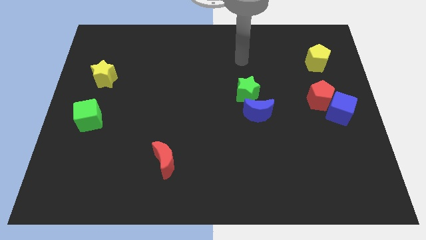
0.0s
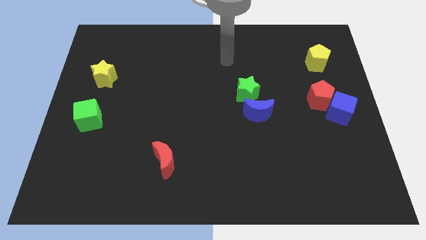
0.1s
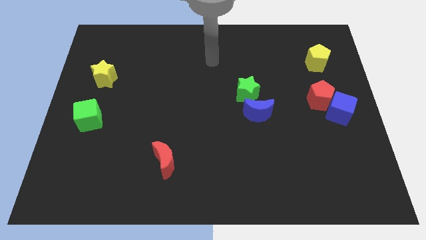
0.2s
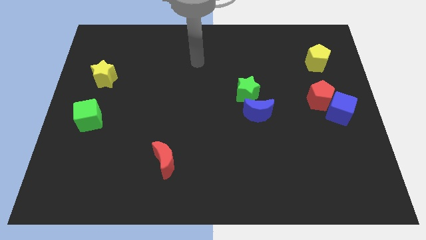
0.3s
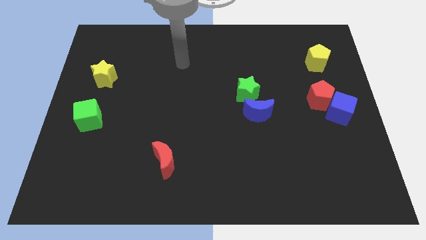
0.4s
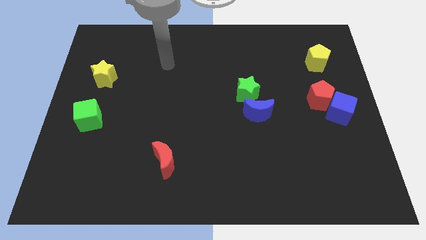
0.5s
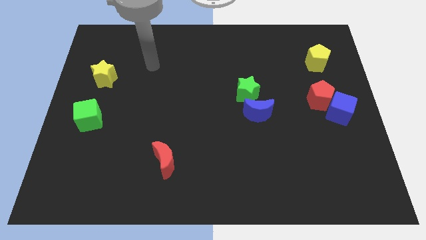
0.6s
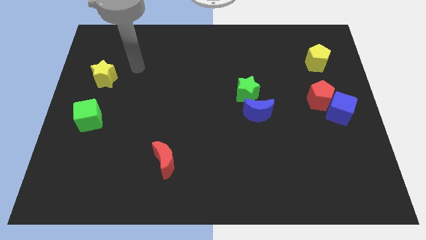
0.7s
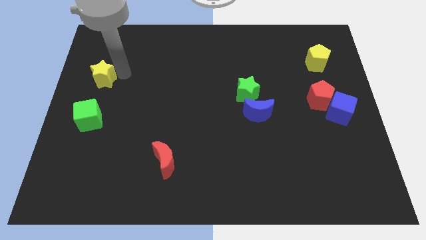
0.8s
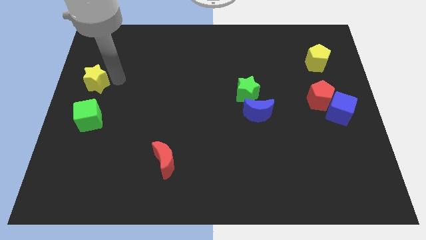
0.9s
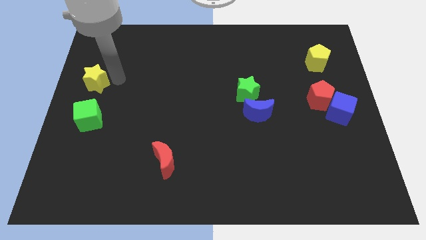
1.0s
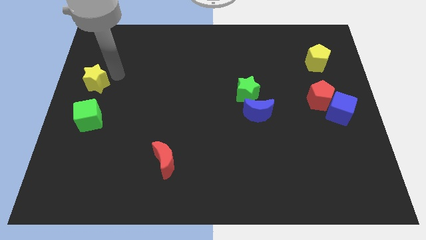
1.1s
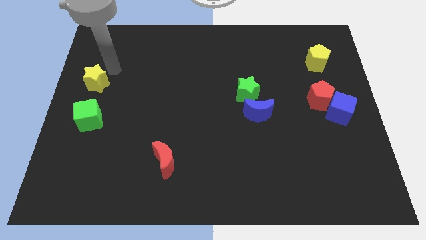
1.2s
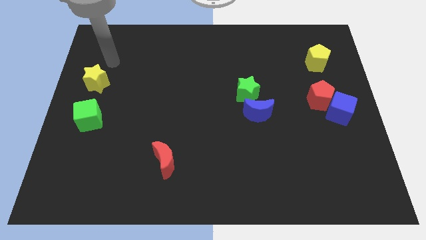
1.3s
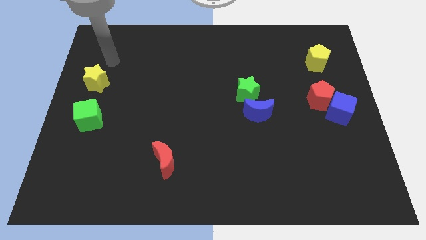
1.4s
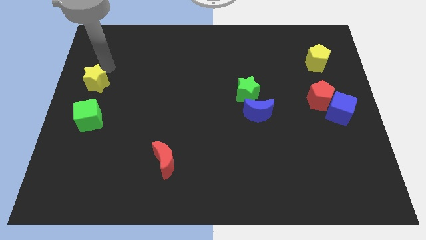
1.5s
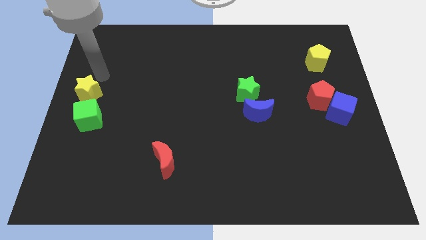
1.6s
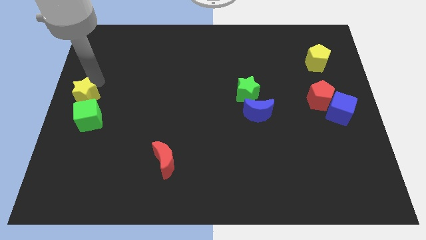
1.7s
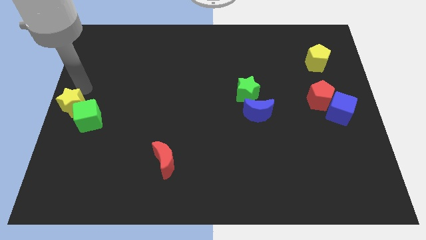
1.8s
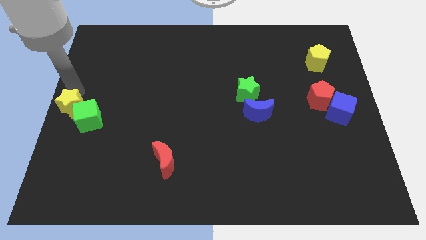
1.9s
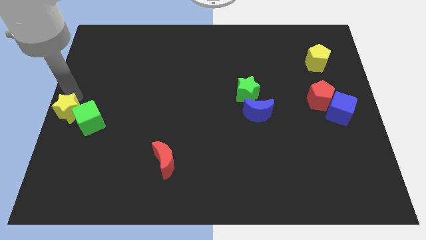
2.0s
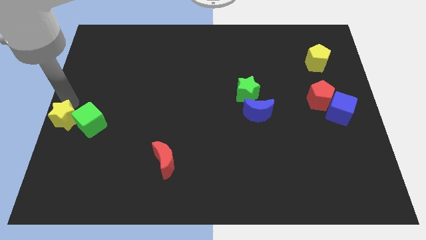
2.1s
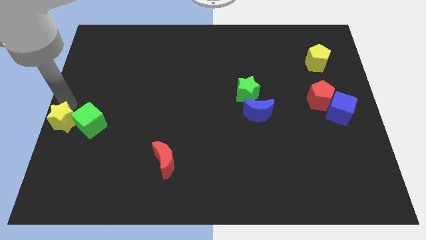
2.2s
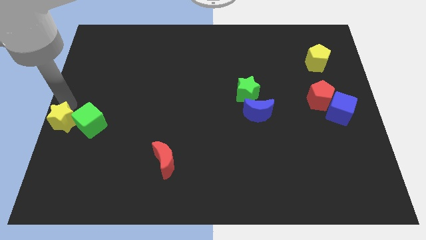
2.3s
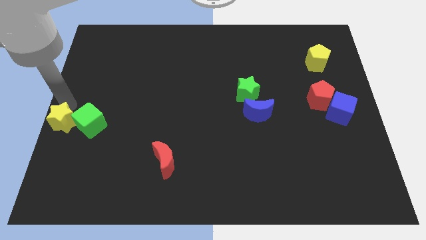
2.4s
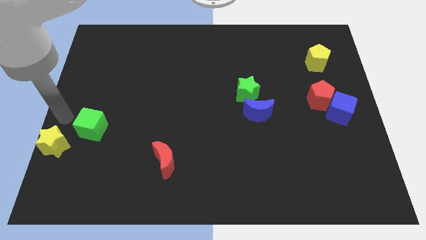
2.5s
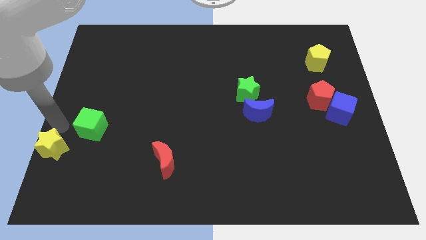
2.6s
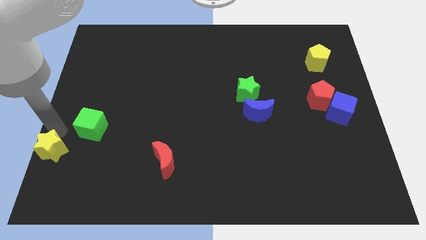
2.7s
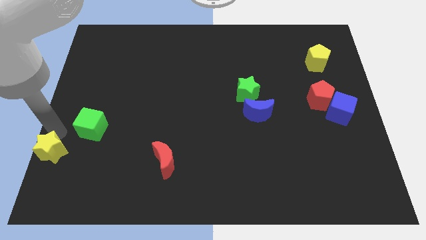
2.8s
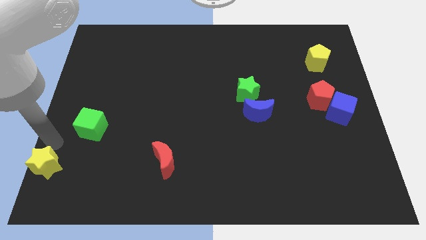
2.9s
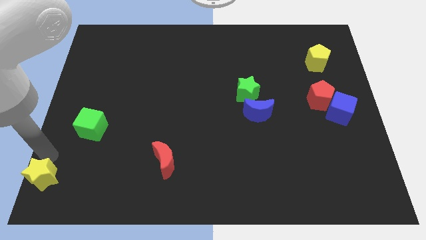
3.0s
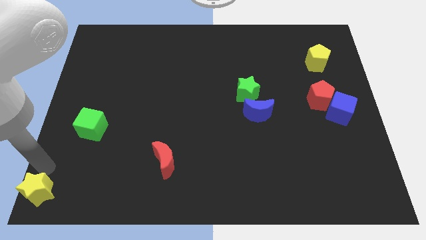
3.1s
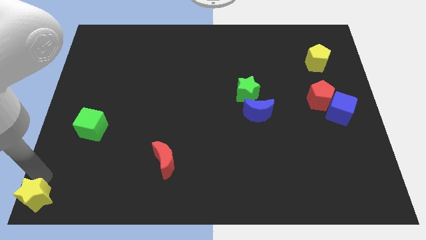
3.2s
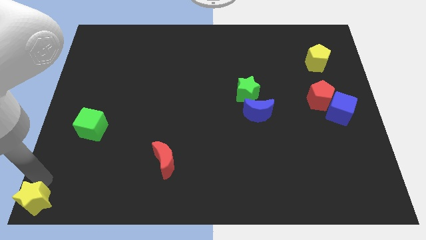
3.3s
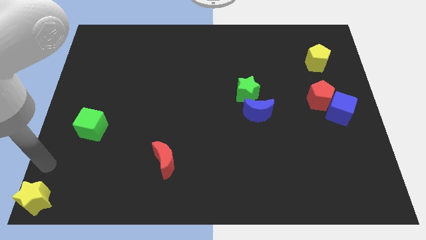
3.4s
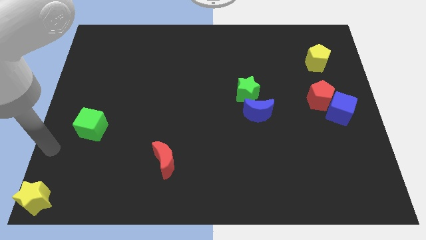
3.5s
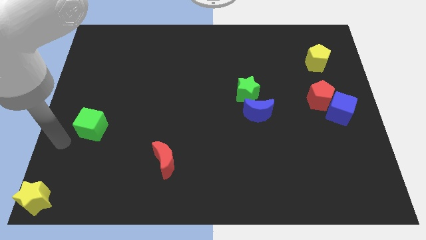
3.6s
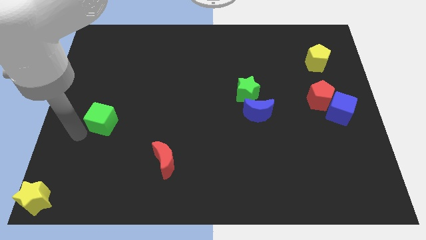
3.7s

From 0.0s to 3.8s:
move the yellow star towards the bottom left corner

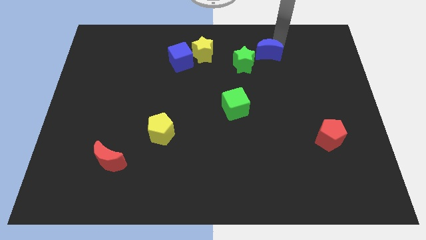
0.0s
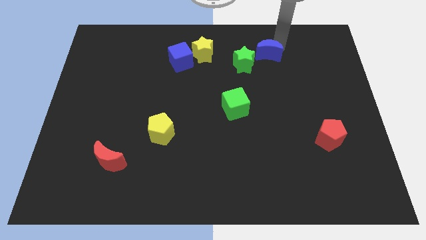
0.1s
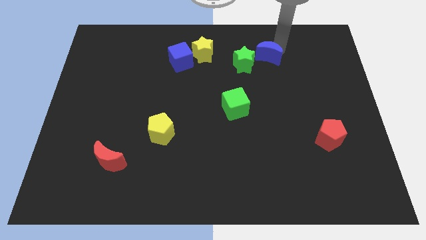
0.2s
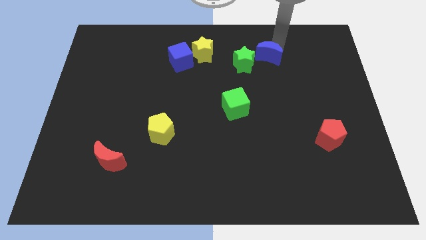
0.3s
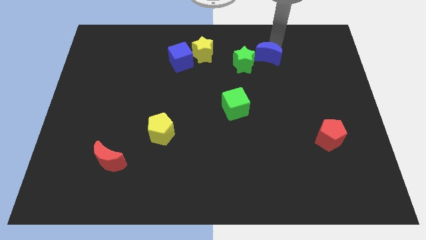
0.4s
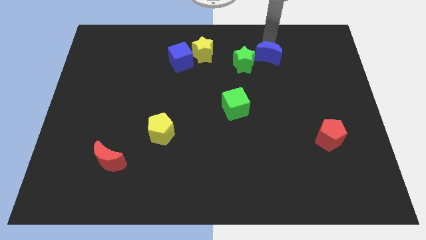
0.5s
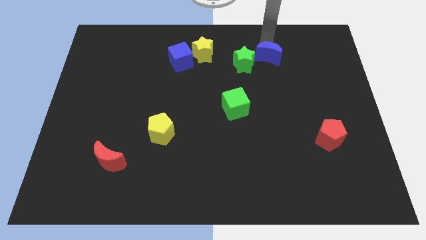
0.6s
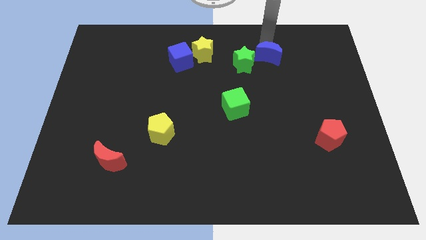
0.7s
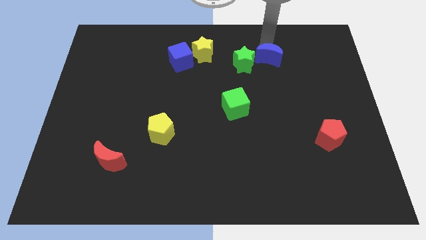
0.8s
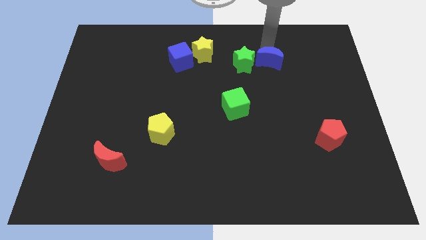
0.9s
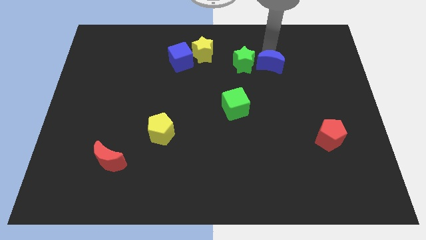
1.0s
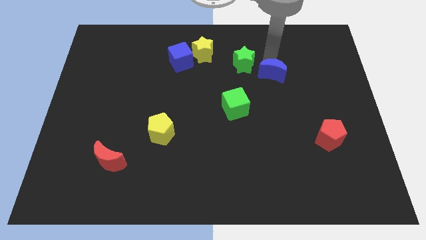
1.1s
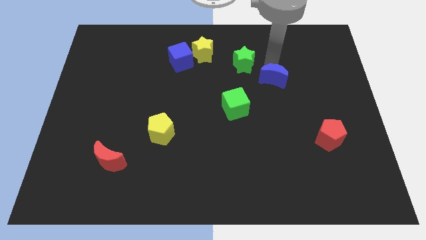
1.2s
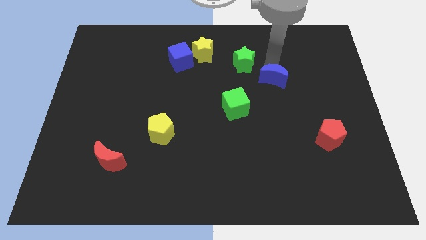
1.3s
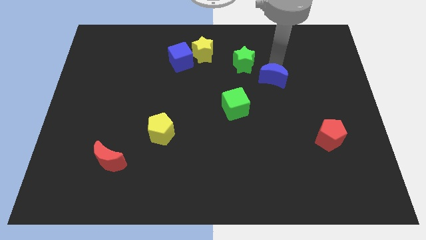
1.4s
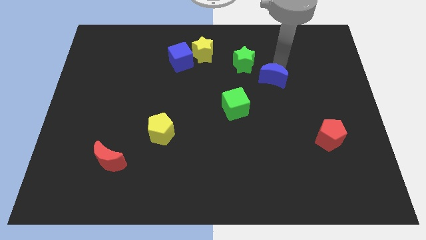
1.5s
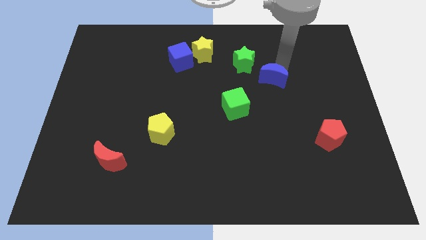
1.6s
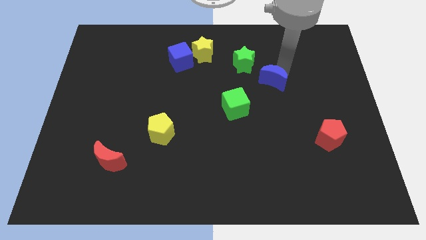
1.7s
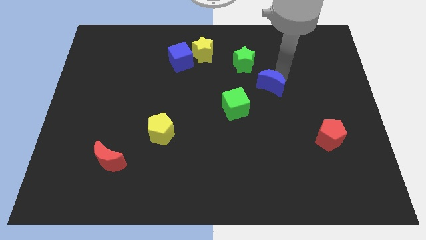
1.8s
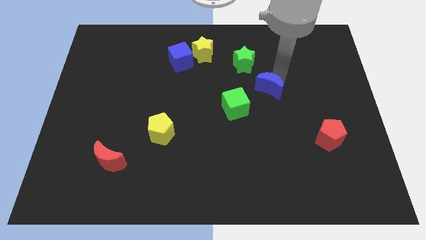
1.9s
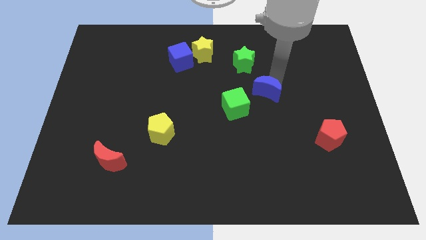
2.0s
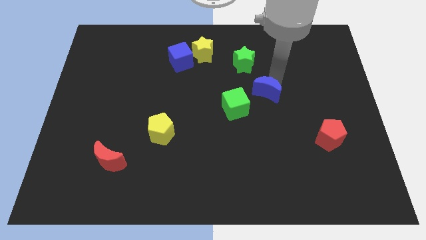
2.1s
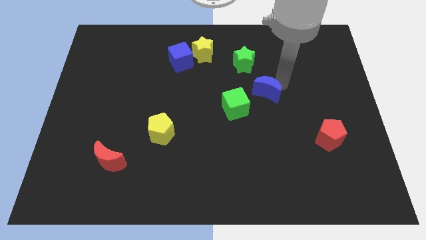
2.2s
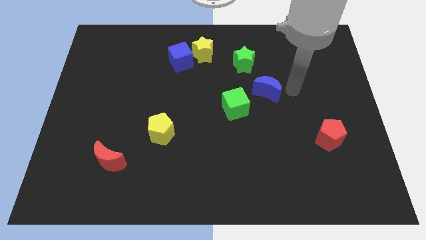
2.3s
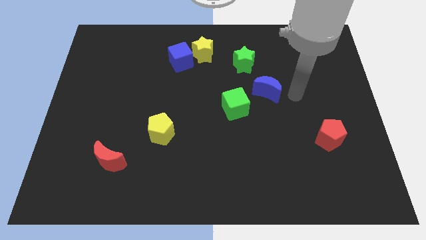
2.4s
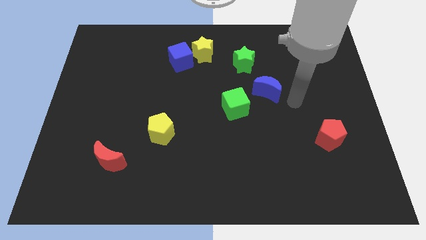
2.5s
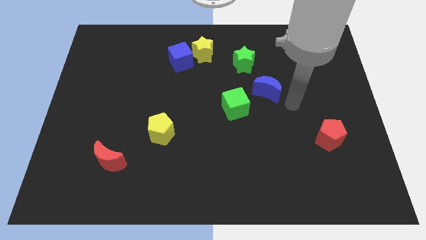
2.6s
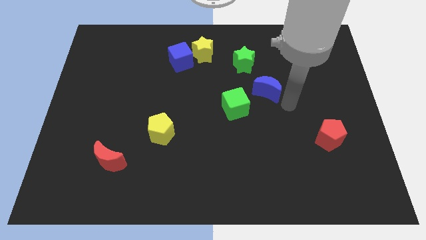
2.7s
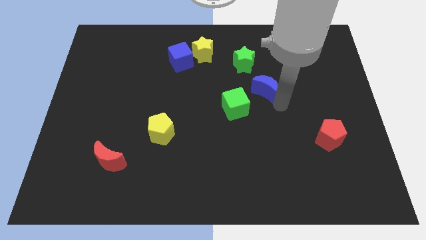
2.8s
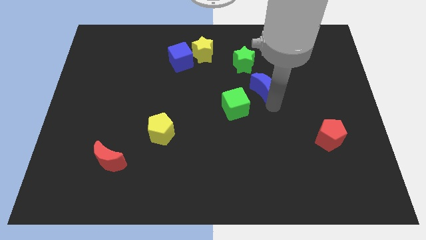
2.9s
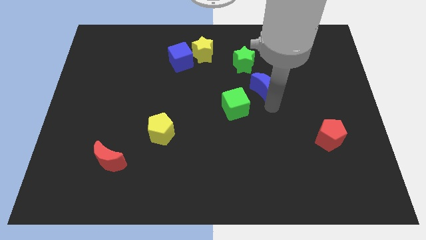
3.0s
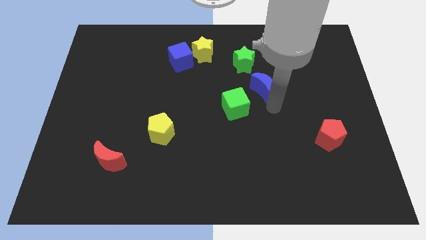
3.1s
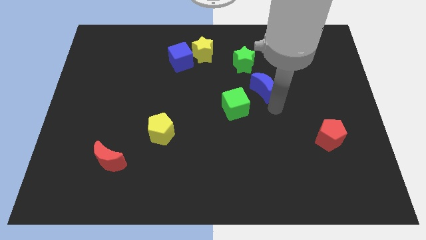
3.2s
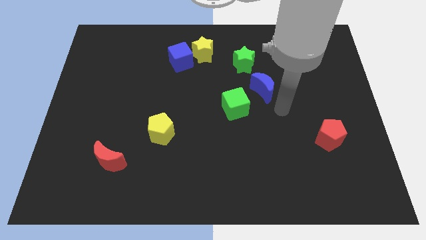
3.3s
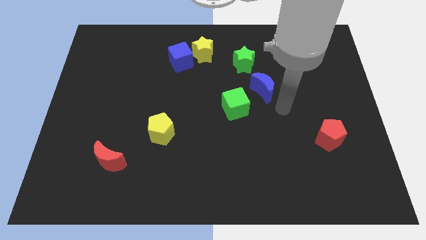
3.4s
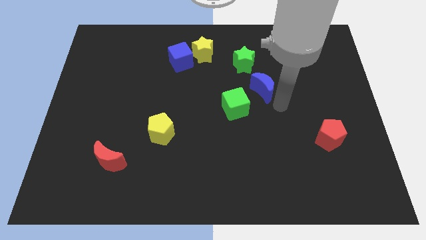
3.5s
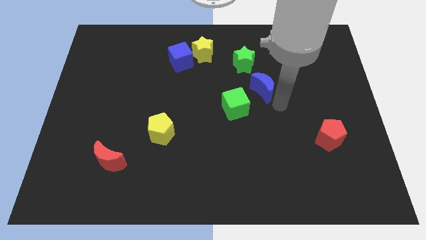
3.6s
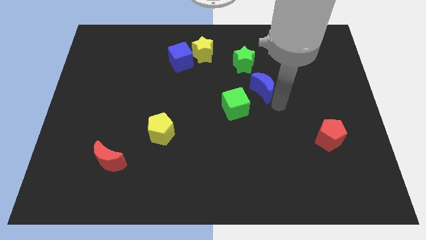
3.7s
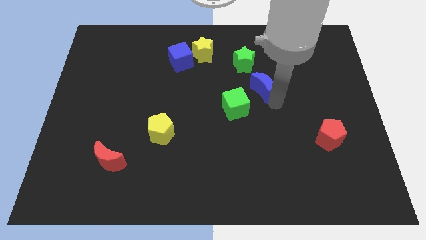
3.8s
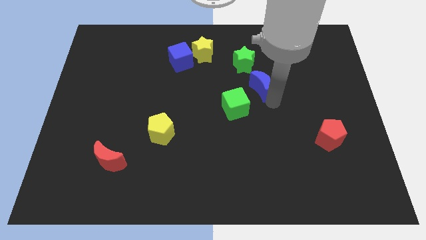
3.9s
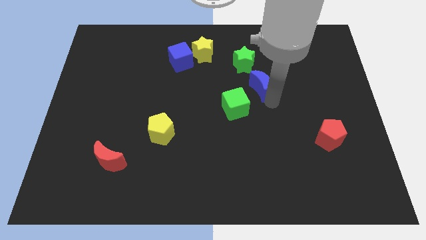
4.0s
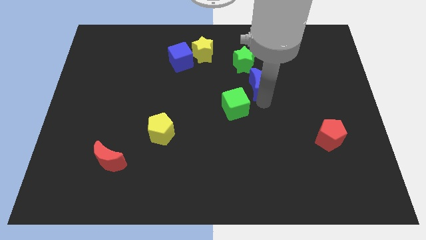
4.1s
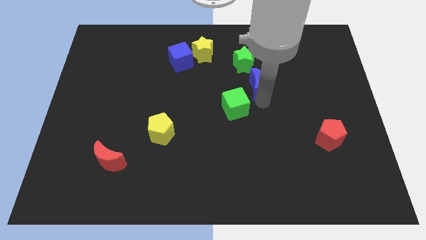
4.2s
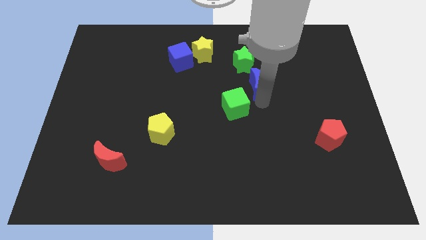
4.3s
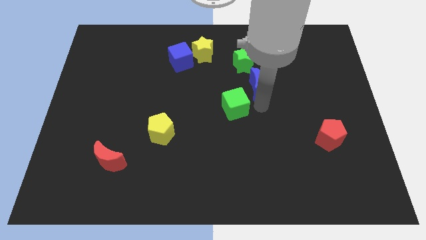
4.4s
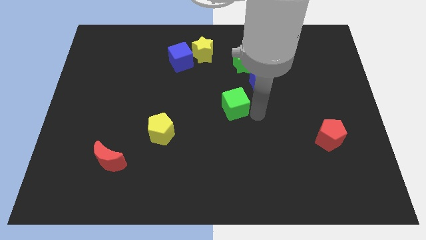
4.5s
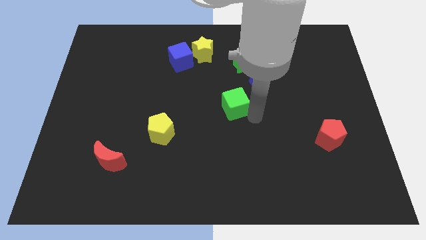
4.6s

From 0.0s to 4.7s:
push the blue crescent below the green star

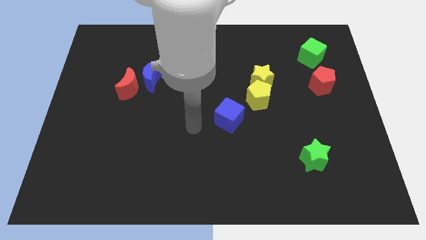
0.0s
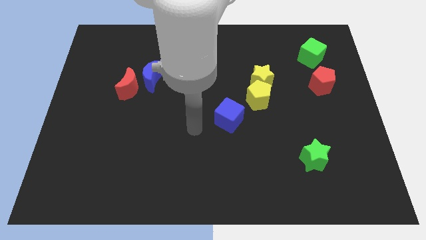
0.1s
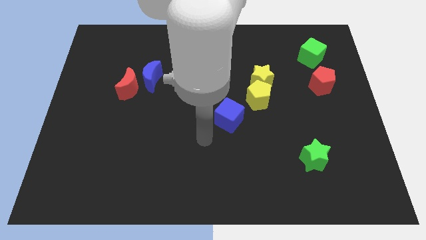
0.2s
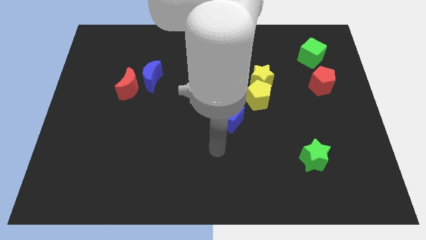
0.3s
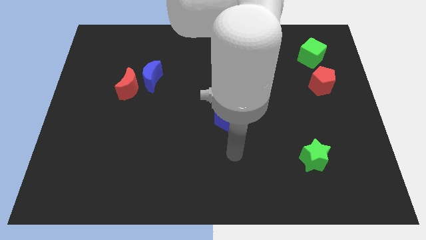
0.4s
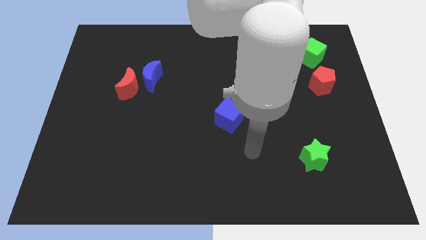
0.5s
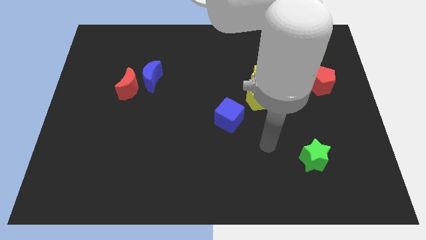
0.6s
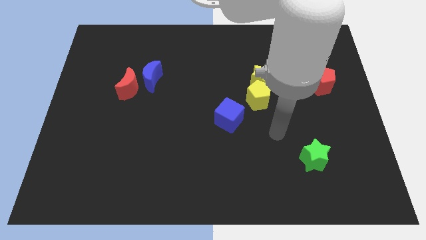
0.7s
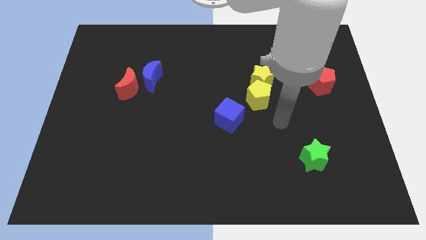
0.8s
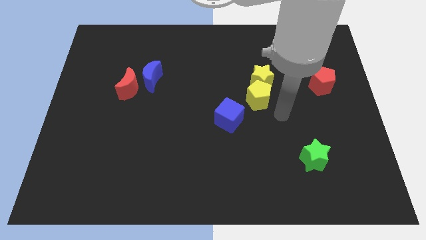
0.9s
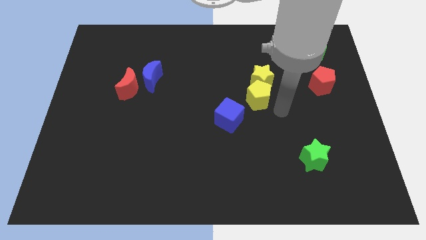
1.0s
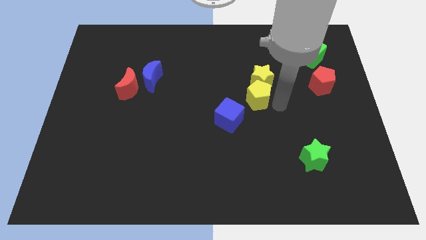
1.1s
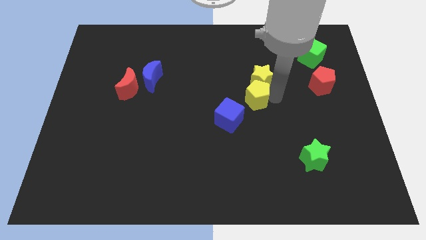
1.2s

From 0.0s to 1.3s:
point your arm at the right of the yellow pentagon
